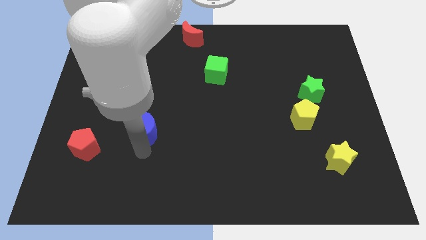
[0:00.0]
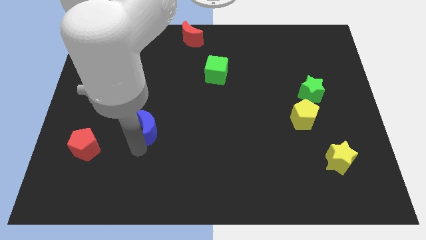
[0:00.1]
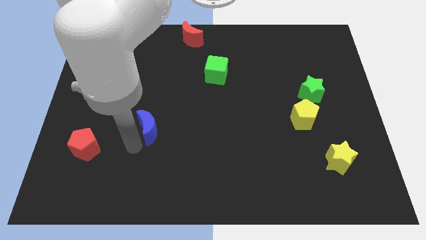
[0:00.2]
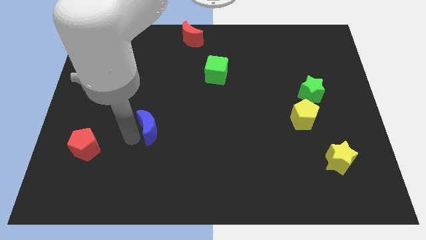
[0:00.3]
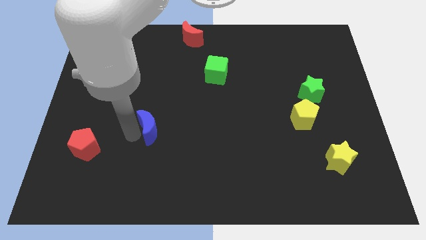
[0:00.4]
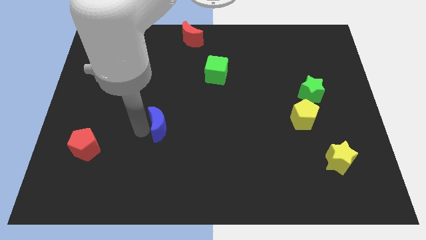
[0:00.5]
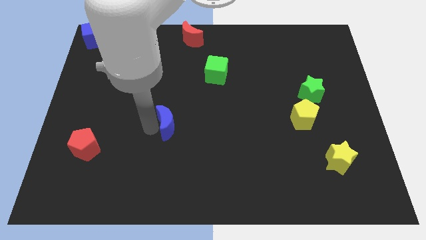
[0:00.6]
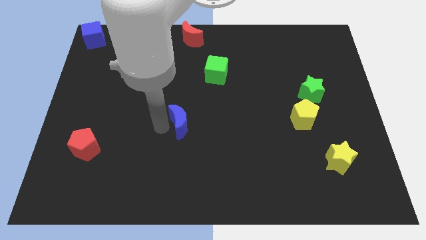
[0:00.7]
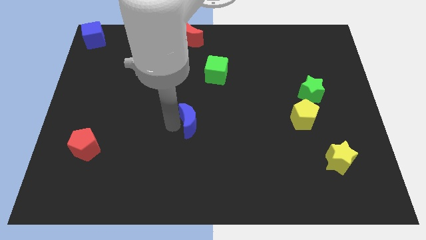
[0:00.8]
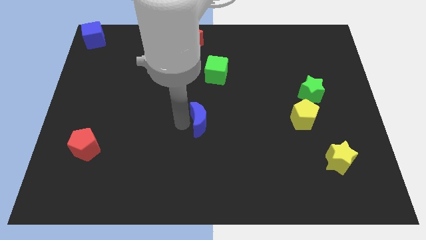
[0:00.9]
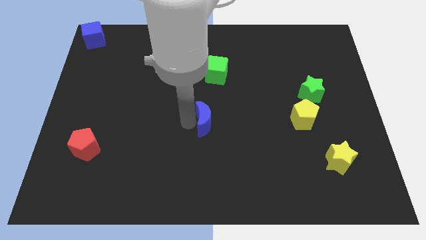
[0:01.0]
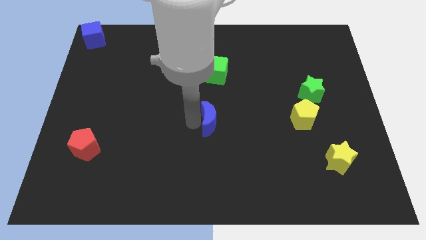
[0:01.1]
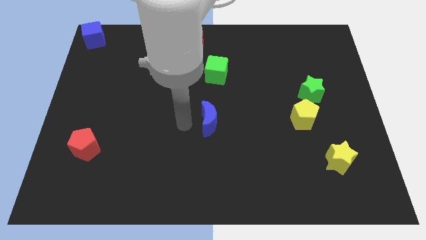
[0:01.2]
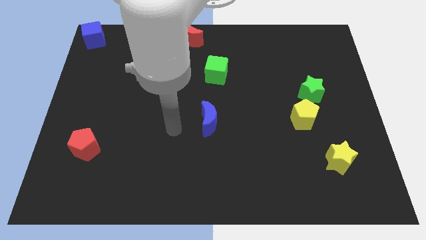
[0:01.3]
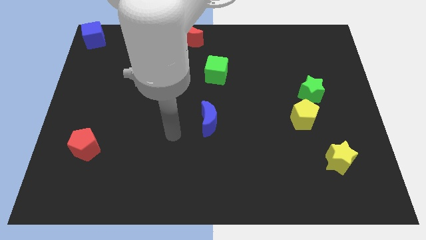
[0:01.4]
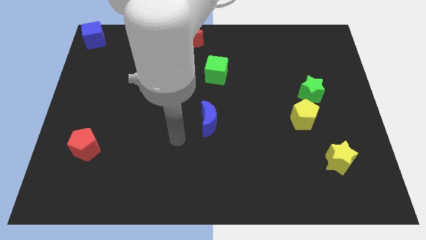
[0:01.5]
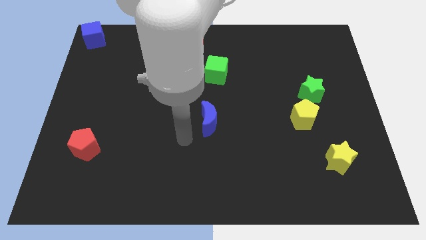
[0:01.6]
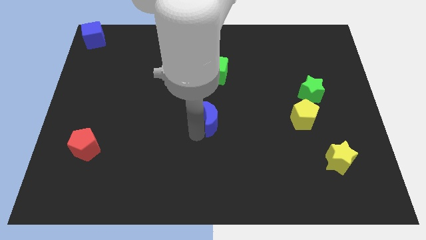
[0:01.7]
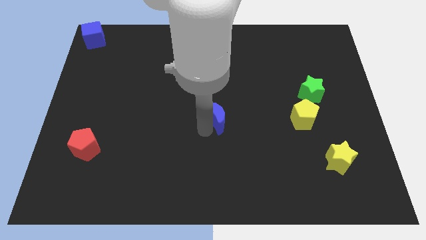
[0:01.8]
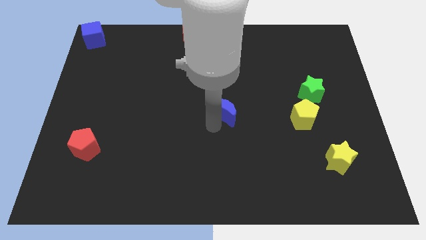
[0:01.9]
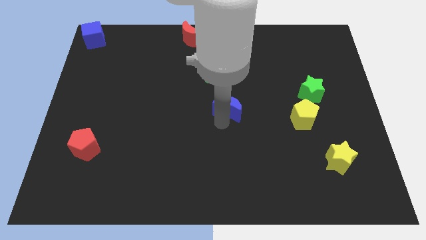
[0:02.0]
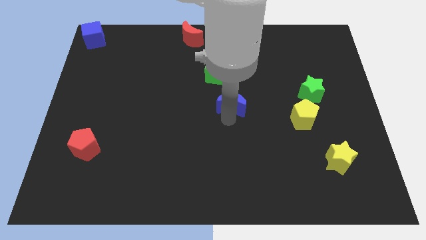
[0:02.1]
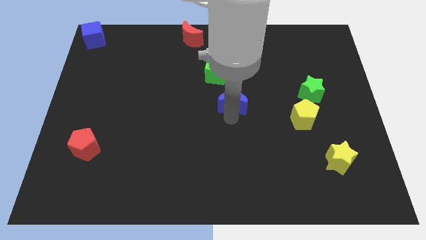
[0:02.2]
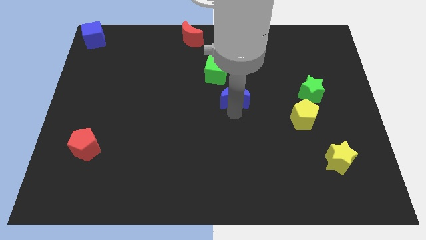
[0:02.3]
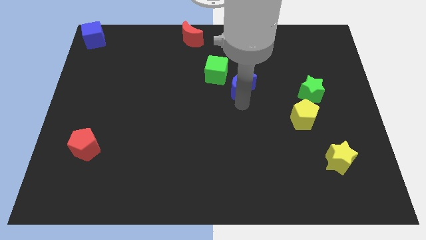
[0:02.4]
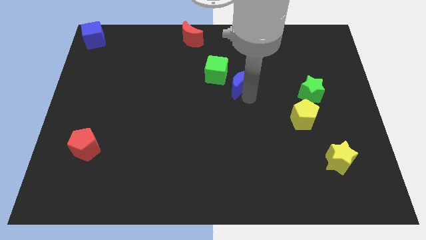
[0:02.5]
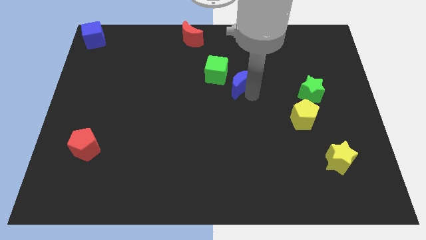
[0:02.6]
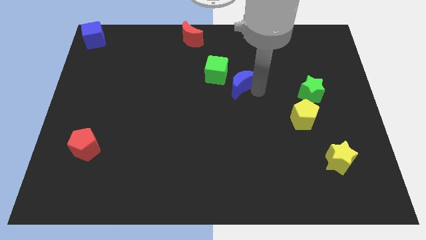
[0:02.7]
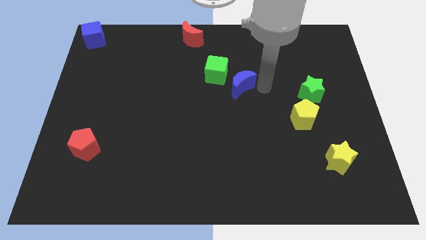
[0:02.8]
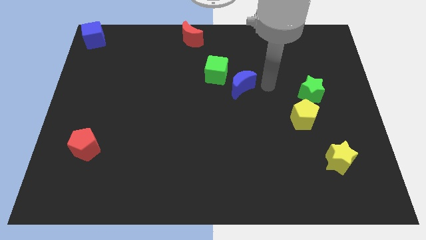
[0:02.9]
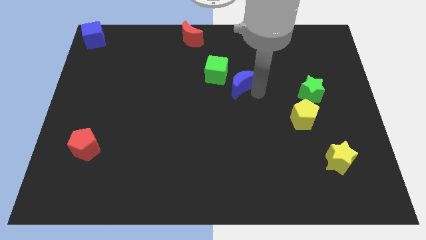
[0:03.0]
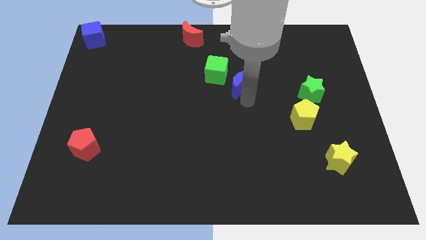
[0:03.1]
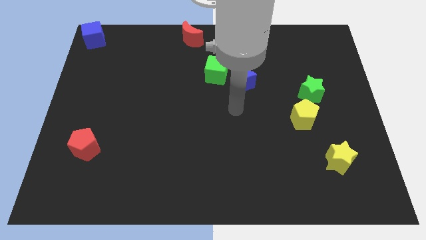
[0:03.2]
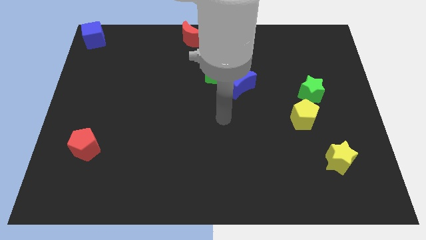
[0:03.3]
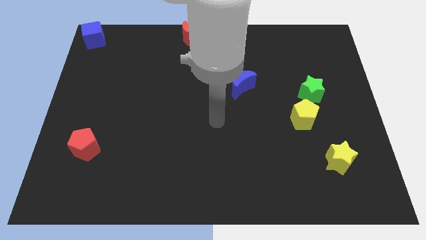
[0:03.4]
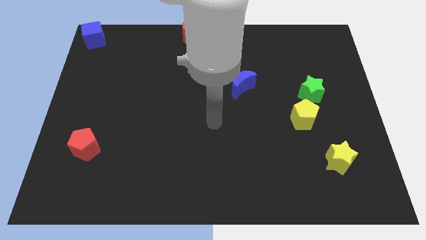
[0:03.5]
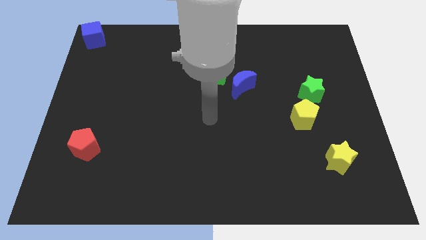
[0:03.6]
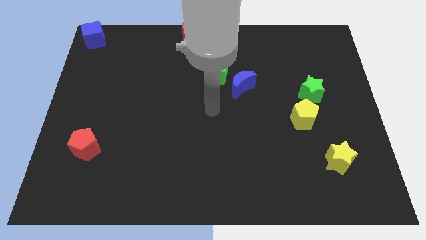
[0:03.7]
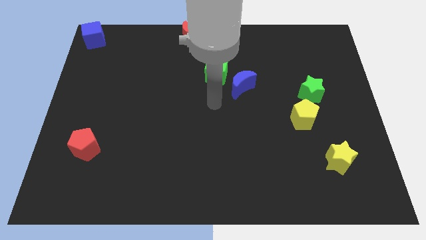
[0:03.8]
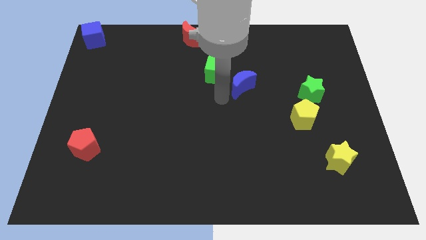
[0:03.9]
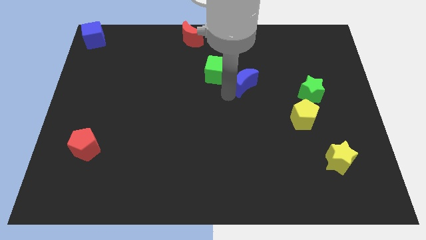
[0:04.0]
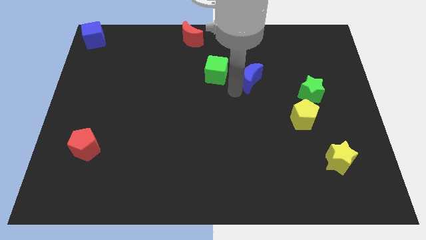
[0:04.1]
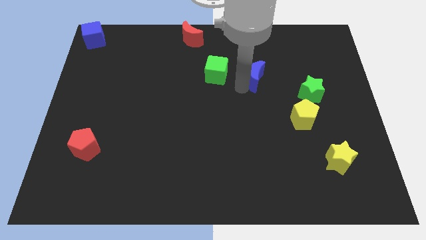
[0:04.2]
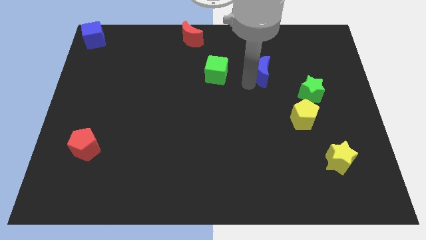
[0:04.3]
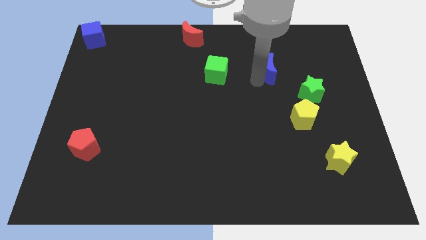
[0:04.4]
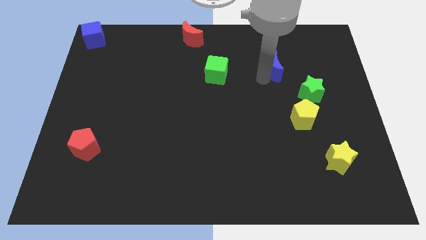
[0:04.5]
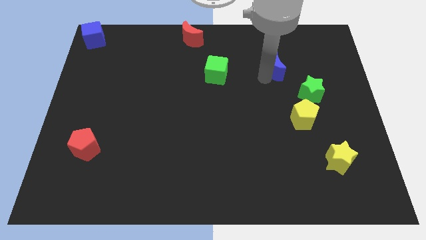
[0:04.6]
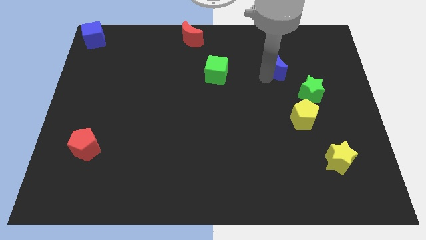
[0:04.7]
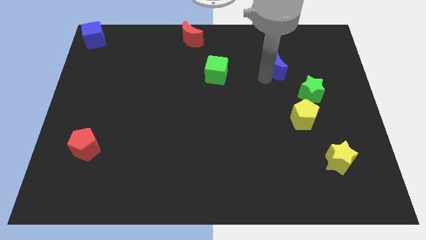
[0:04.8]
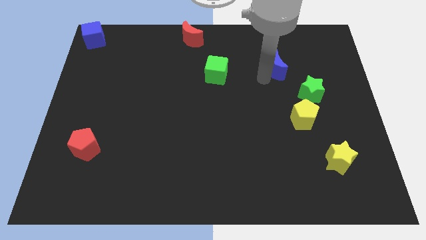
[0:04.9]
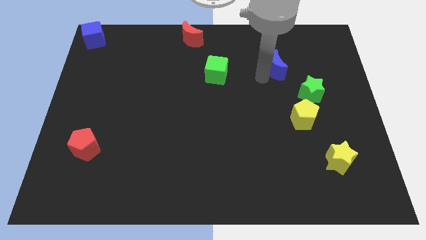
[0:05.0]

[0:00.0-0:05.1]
move the blue moon to the right side of the green cube

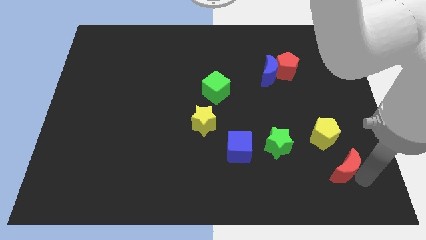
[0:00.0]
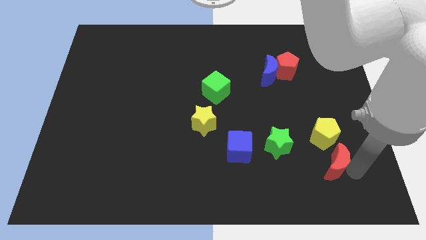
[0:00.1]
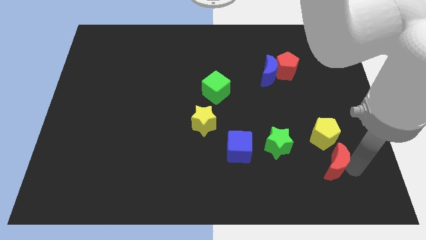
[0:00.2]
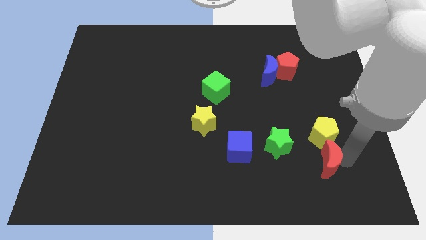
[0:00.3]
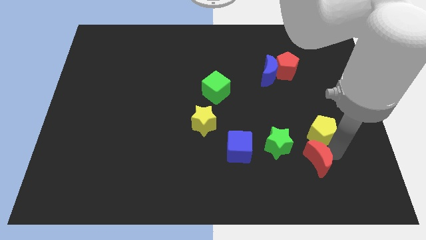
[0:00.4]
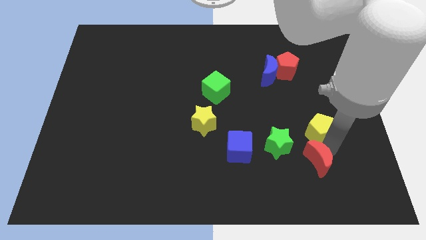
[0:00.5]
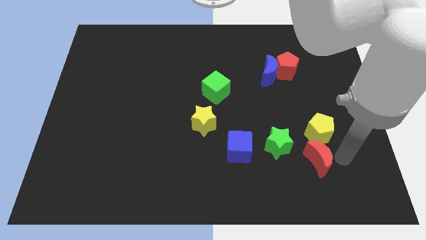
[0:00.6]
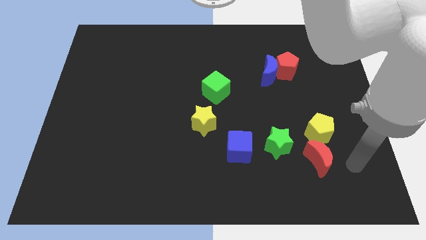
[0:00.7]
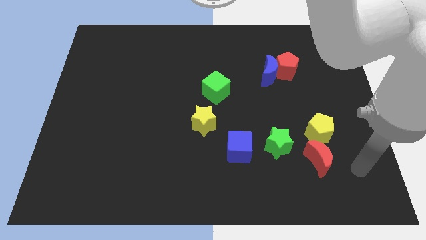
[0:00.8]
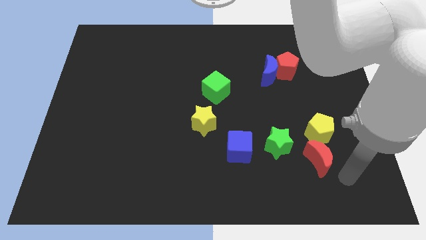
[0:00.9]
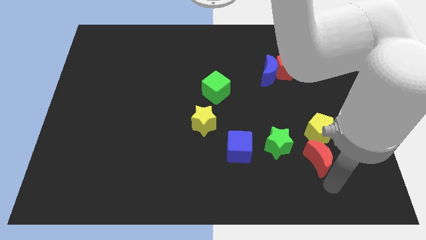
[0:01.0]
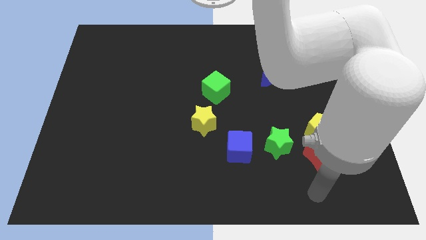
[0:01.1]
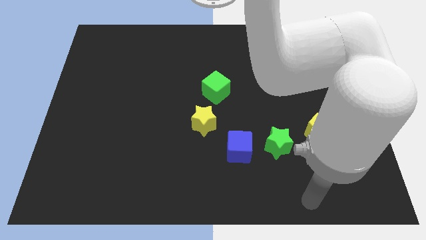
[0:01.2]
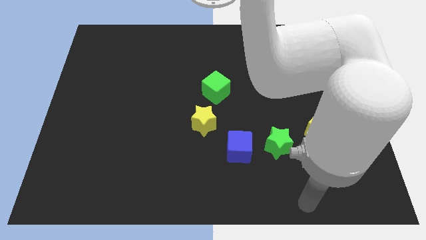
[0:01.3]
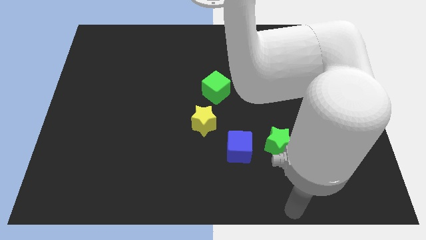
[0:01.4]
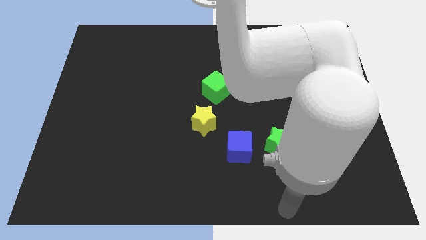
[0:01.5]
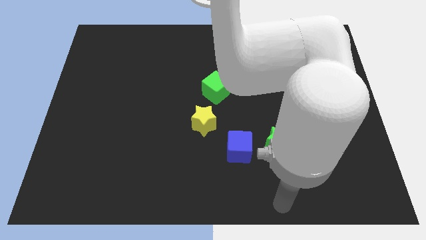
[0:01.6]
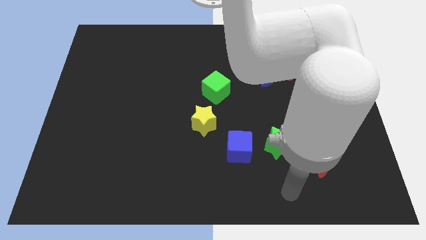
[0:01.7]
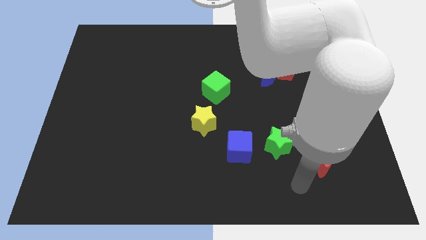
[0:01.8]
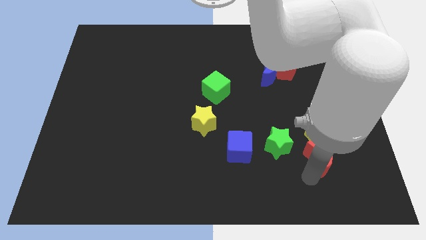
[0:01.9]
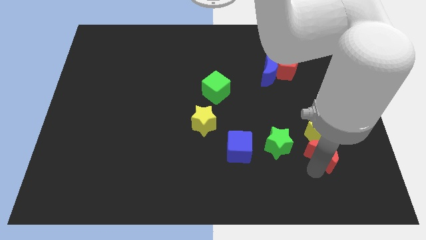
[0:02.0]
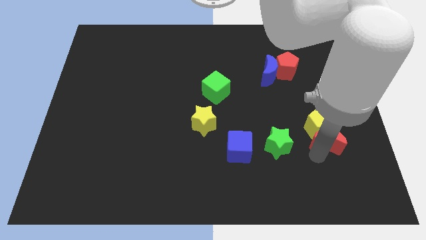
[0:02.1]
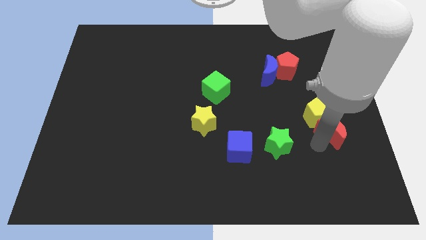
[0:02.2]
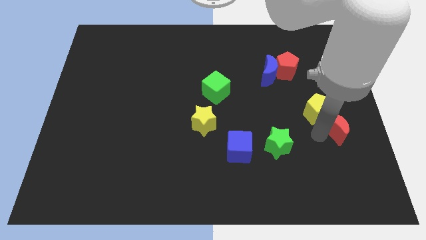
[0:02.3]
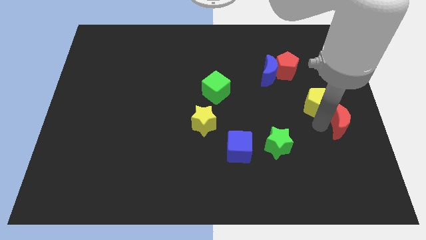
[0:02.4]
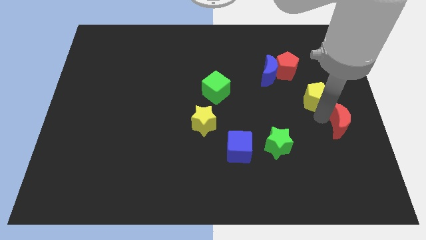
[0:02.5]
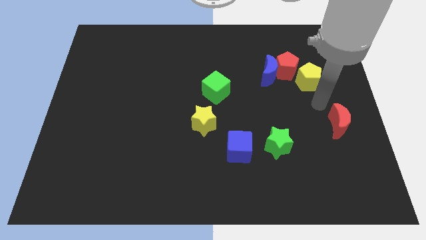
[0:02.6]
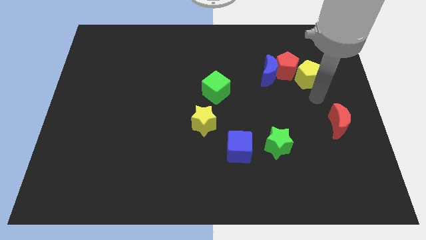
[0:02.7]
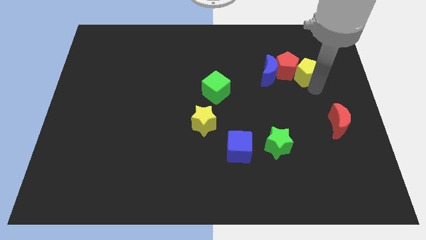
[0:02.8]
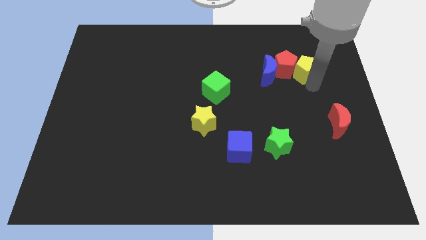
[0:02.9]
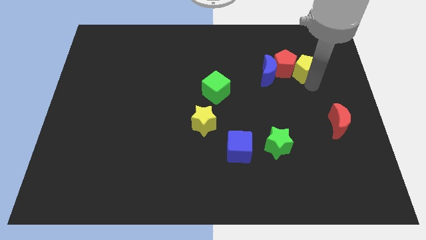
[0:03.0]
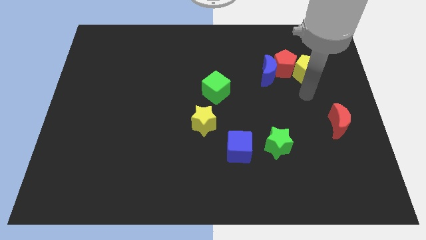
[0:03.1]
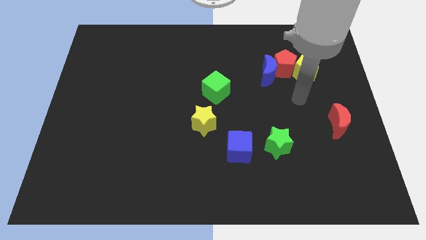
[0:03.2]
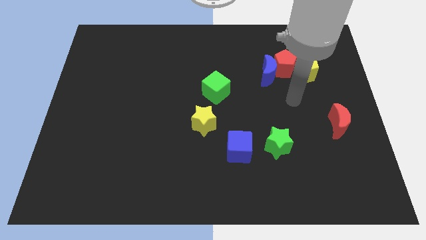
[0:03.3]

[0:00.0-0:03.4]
attach the red pentagon and the yellow pentagon

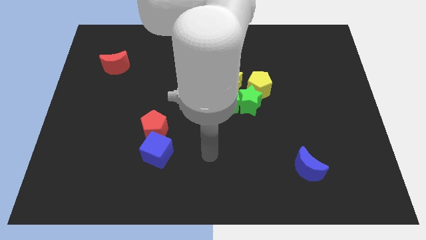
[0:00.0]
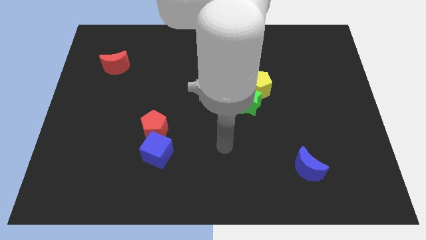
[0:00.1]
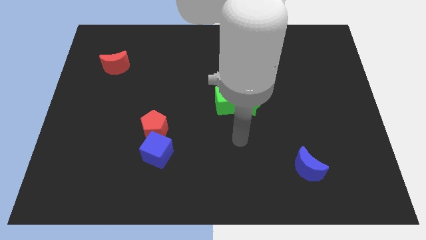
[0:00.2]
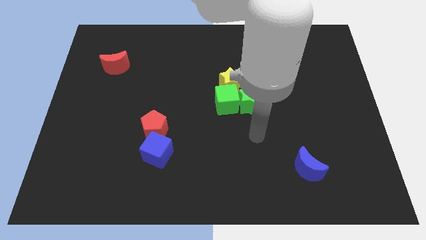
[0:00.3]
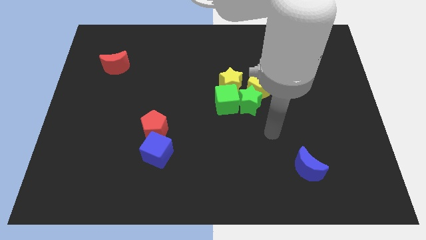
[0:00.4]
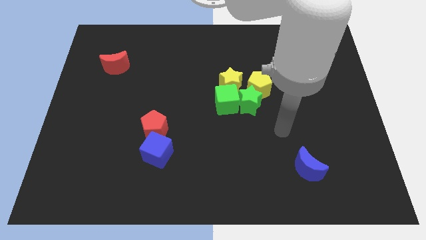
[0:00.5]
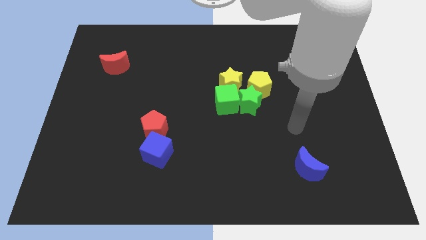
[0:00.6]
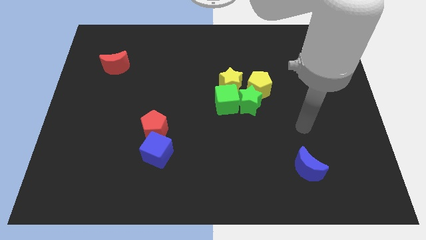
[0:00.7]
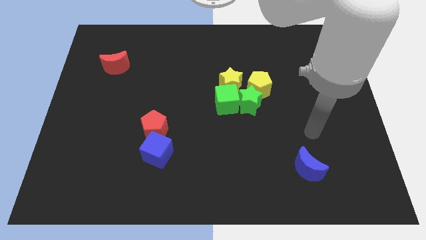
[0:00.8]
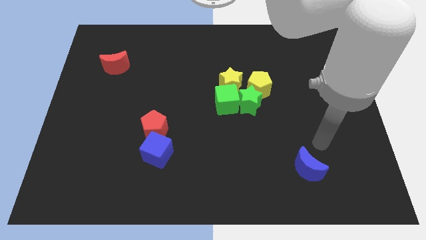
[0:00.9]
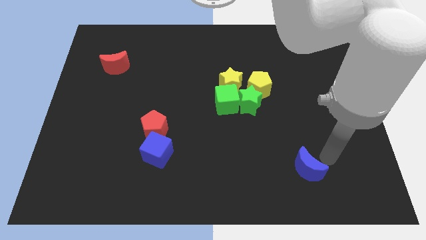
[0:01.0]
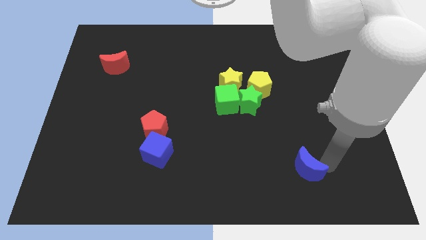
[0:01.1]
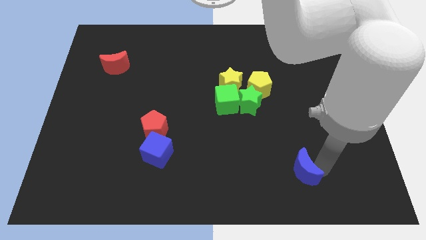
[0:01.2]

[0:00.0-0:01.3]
point your arm right to blue moon
